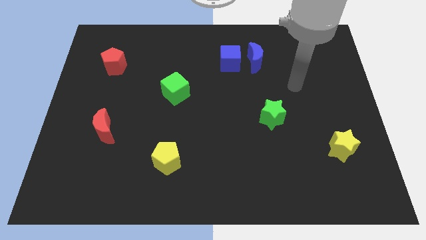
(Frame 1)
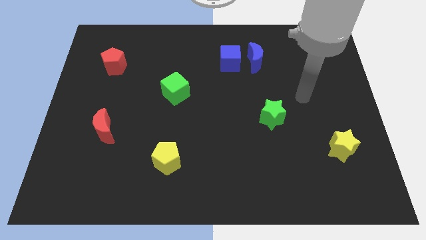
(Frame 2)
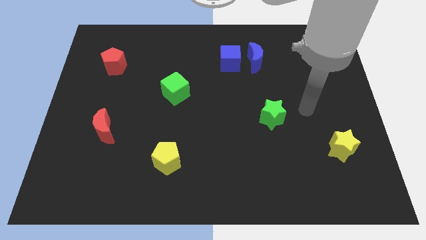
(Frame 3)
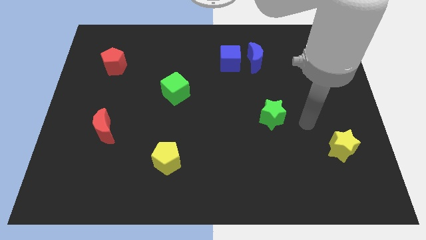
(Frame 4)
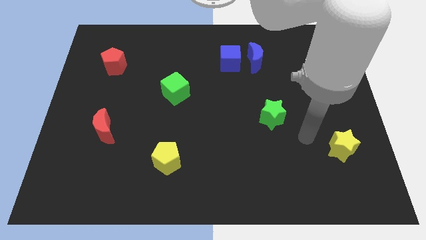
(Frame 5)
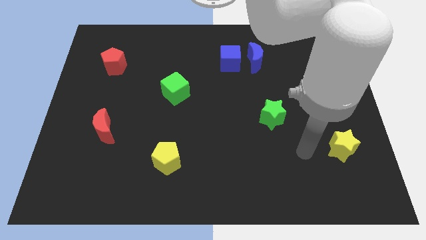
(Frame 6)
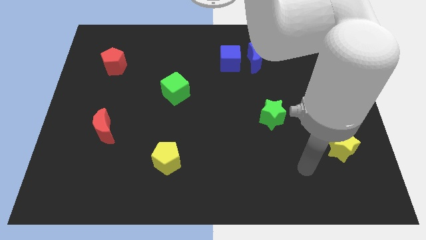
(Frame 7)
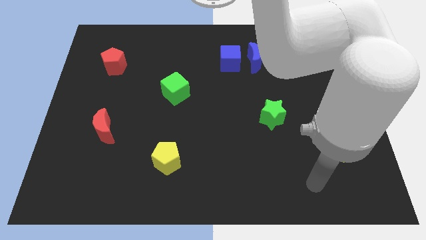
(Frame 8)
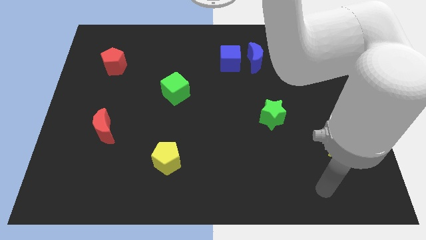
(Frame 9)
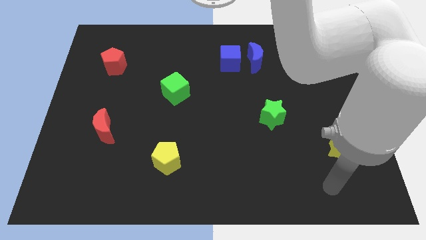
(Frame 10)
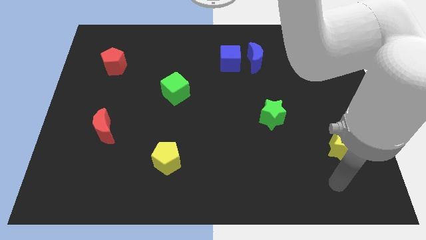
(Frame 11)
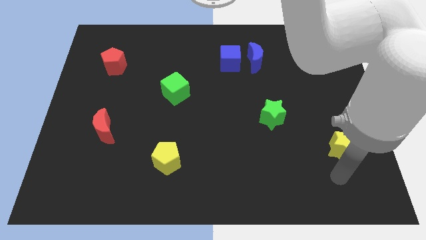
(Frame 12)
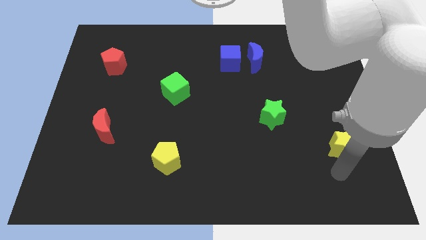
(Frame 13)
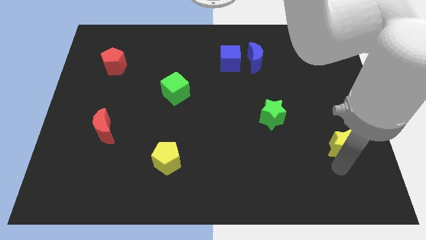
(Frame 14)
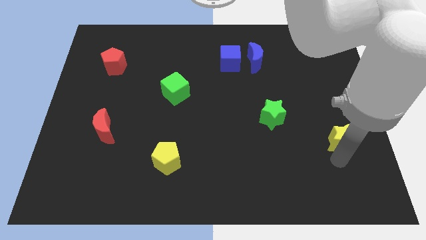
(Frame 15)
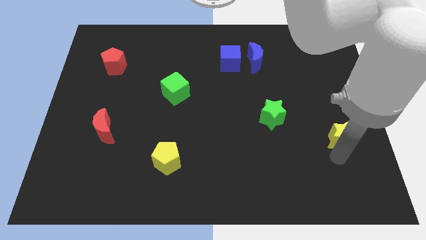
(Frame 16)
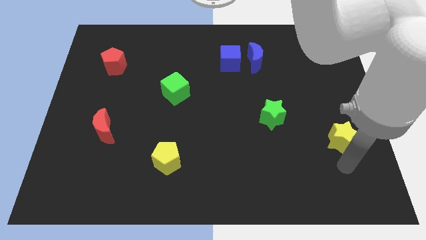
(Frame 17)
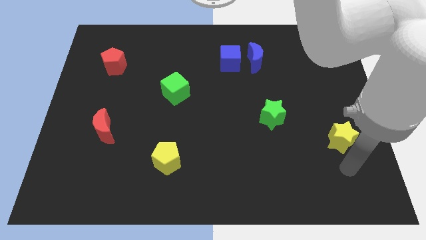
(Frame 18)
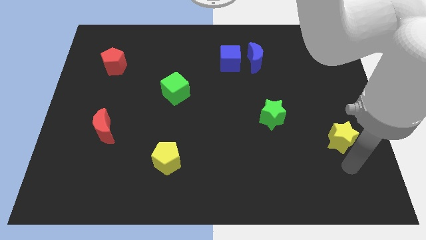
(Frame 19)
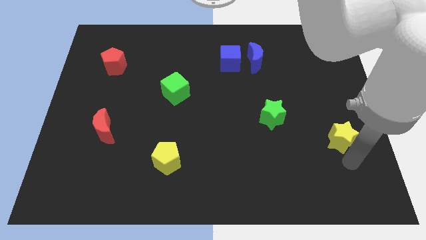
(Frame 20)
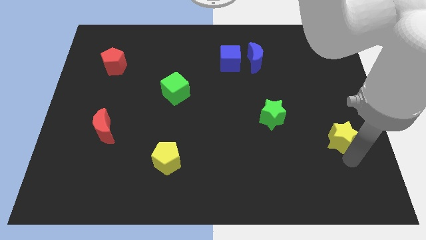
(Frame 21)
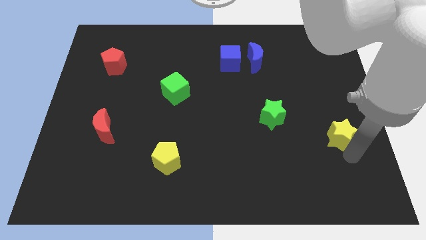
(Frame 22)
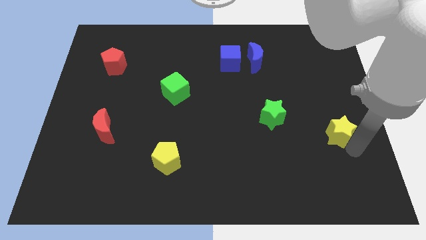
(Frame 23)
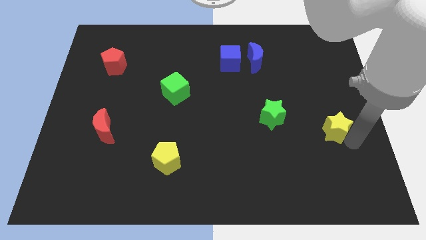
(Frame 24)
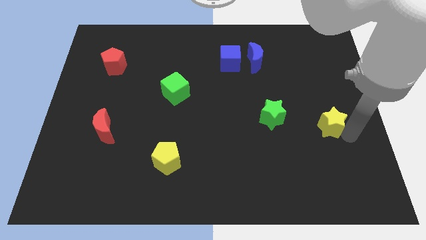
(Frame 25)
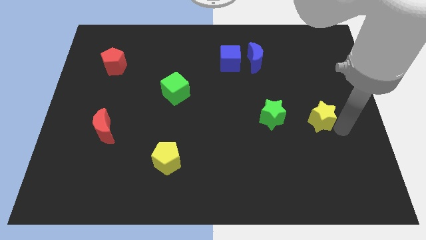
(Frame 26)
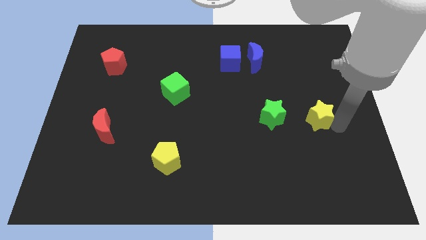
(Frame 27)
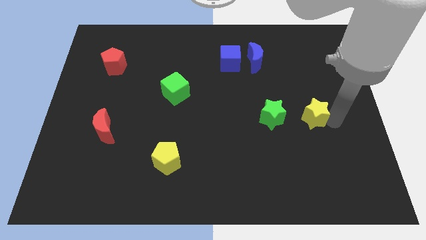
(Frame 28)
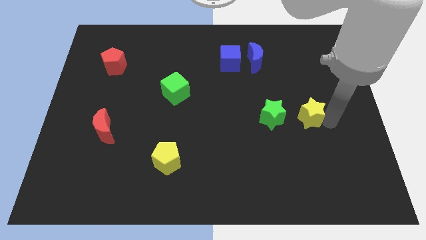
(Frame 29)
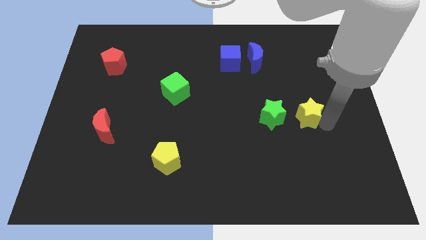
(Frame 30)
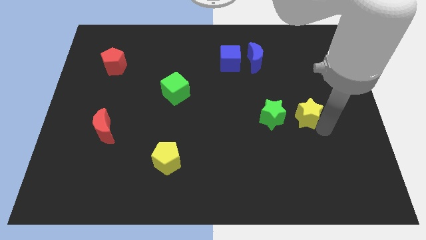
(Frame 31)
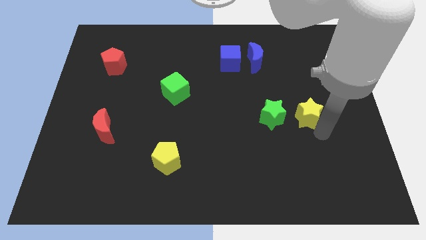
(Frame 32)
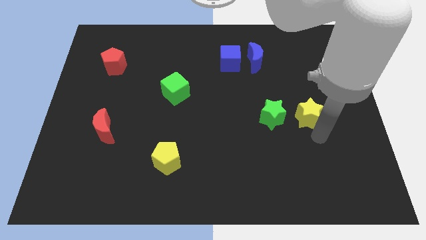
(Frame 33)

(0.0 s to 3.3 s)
place the yellow star to the right of the green star

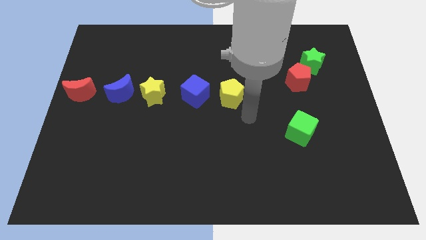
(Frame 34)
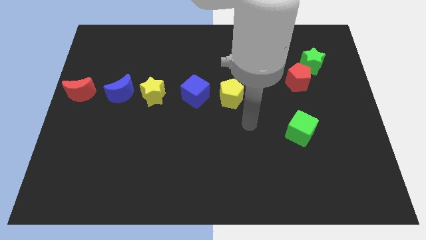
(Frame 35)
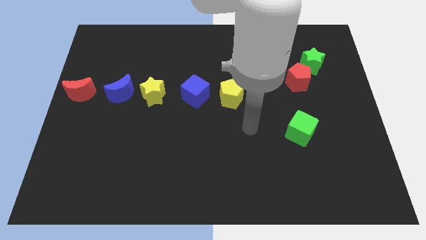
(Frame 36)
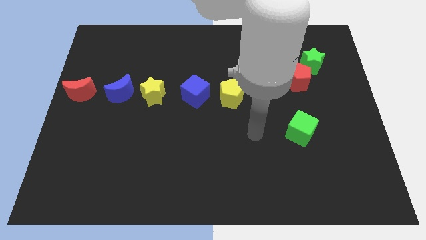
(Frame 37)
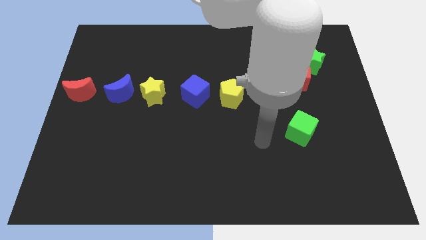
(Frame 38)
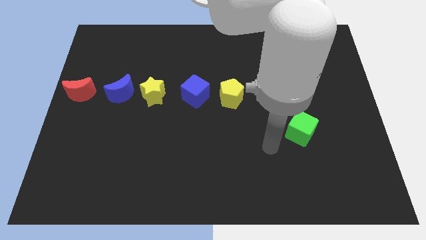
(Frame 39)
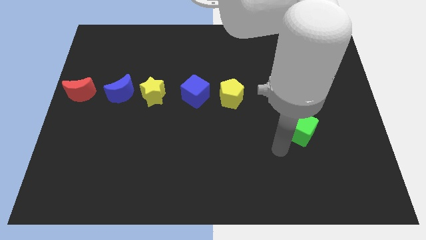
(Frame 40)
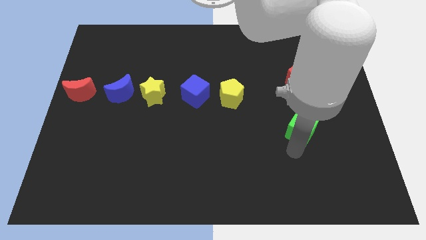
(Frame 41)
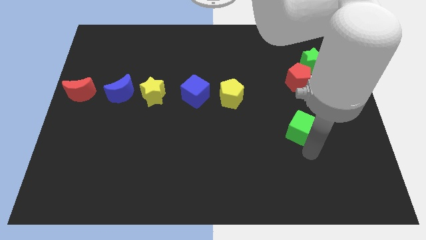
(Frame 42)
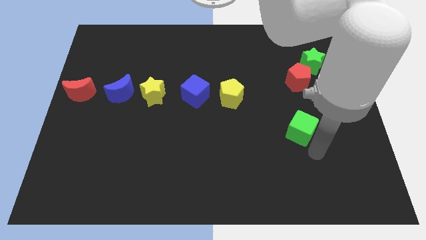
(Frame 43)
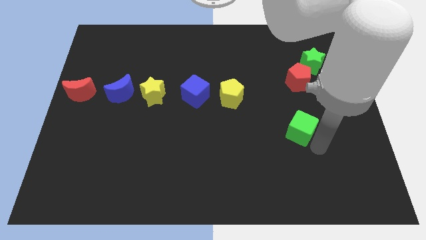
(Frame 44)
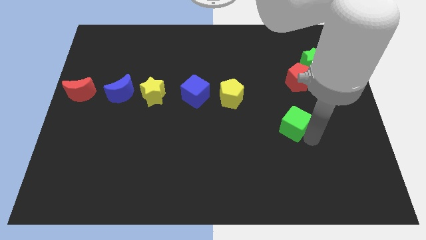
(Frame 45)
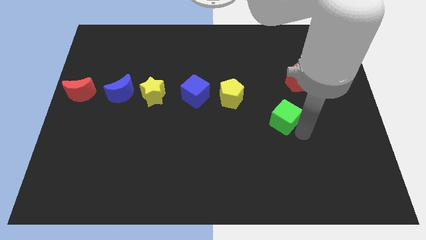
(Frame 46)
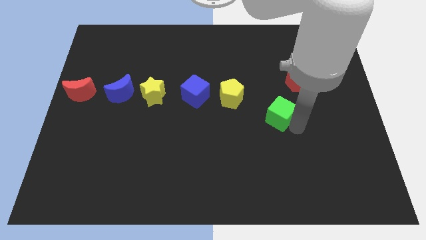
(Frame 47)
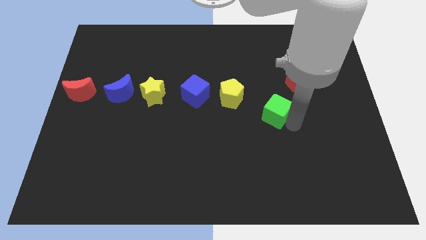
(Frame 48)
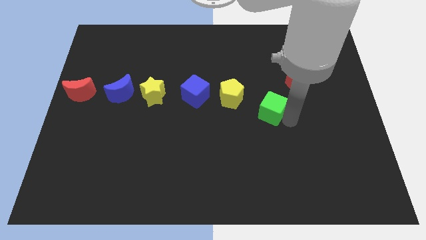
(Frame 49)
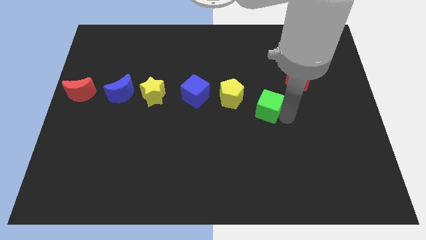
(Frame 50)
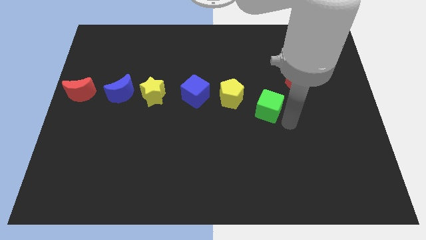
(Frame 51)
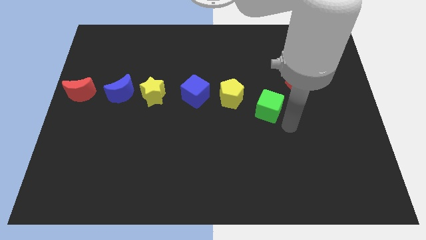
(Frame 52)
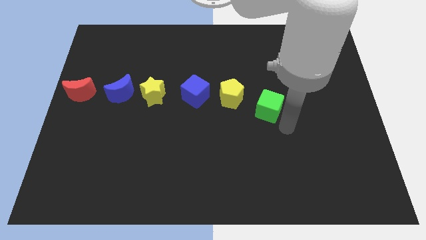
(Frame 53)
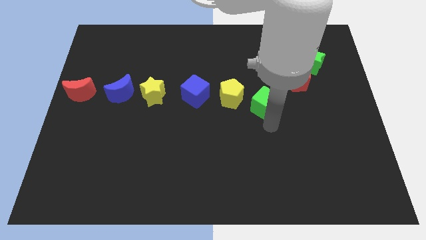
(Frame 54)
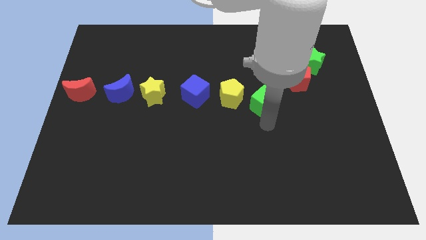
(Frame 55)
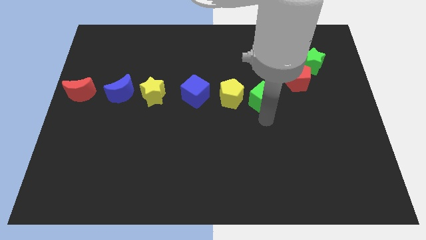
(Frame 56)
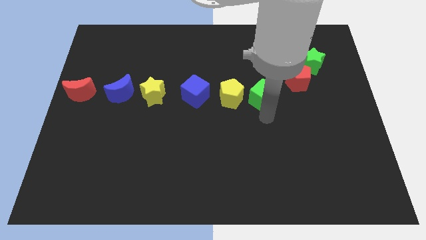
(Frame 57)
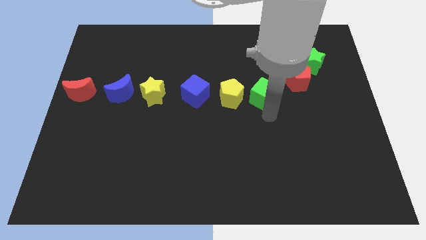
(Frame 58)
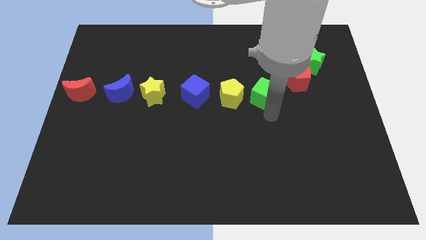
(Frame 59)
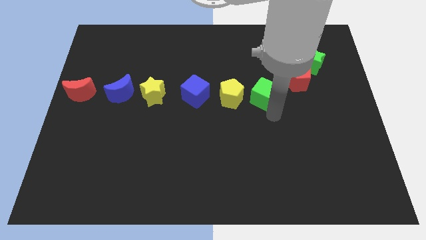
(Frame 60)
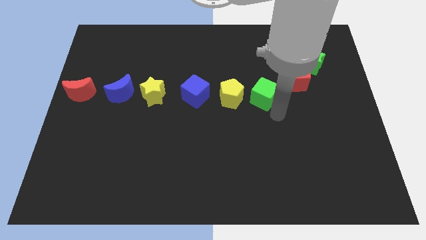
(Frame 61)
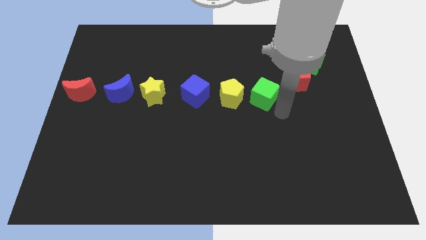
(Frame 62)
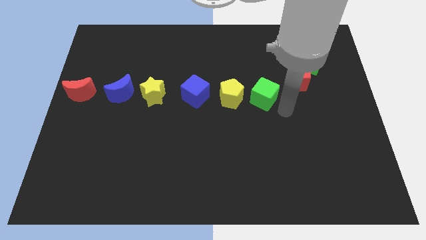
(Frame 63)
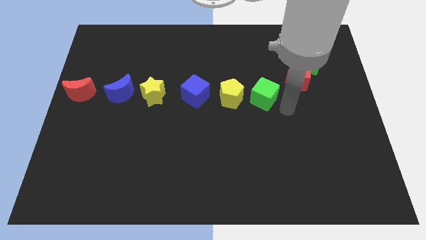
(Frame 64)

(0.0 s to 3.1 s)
place the green cube to the right of the yellow pentagon

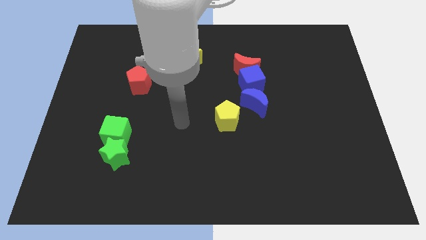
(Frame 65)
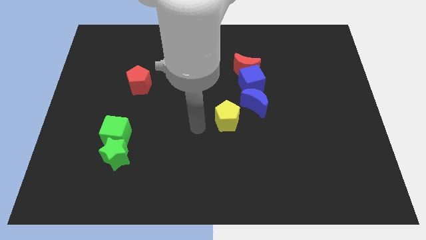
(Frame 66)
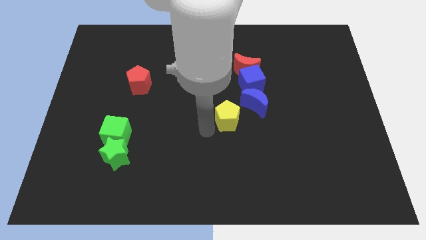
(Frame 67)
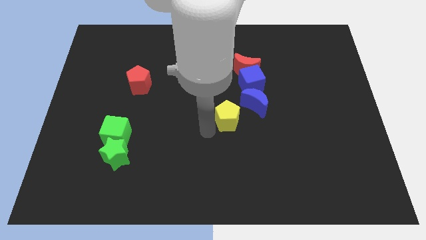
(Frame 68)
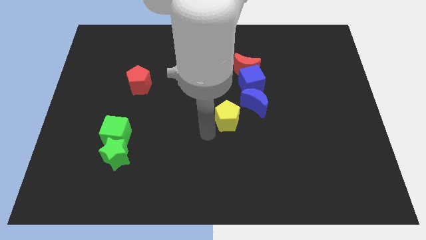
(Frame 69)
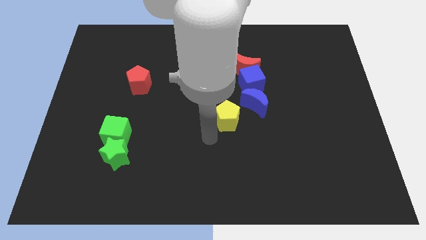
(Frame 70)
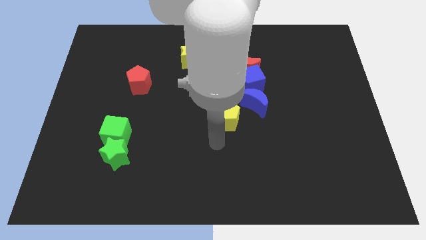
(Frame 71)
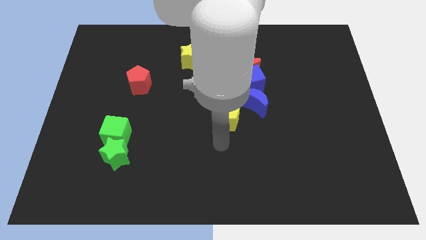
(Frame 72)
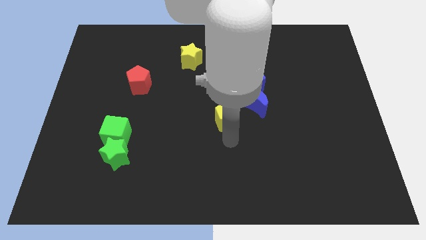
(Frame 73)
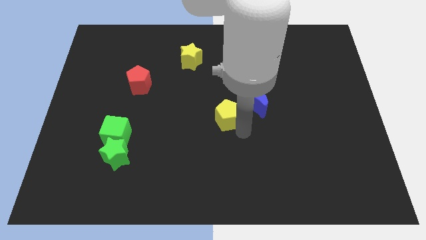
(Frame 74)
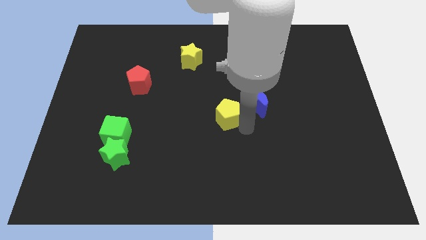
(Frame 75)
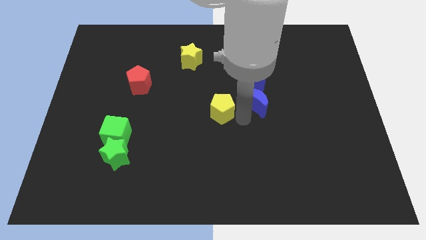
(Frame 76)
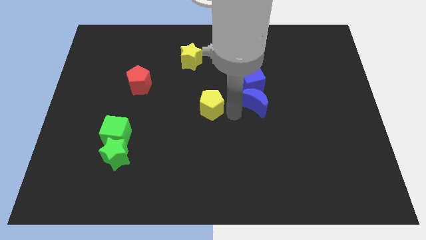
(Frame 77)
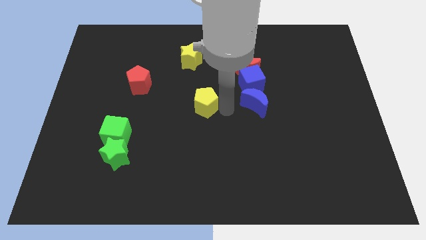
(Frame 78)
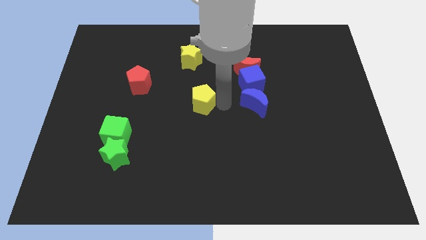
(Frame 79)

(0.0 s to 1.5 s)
place the yellow pentagon at the left side of the blue moon

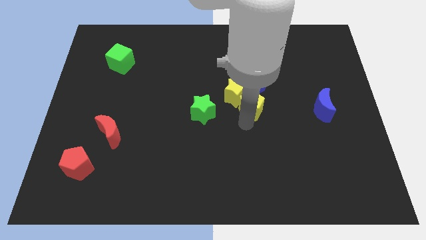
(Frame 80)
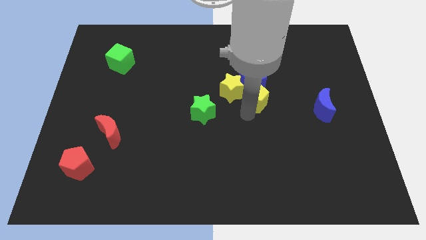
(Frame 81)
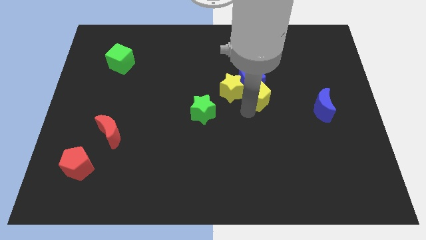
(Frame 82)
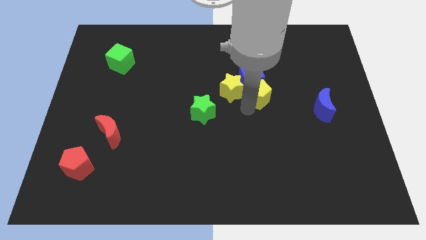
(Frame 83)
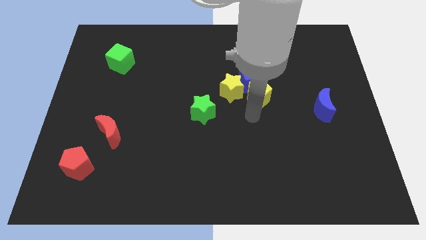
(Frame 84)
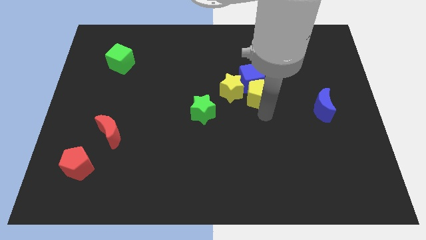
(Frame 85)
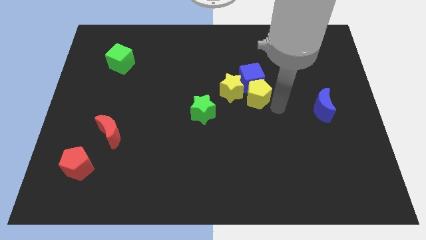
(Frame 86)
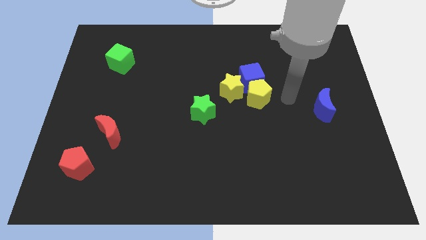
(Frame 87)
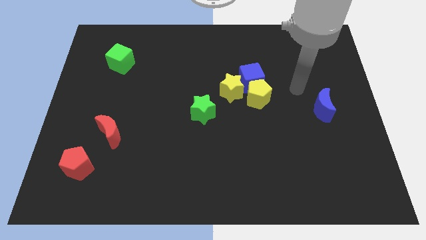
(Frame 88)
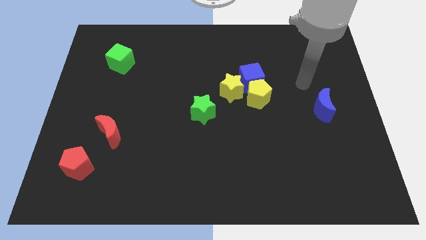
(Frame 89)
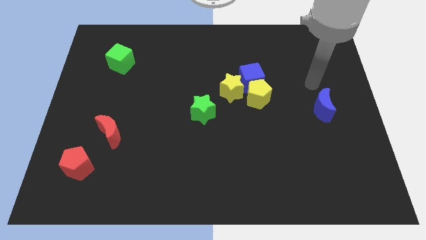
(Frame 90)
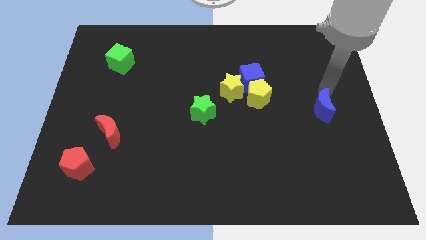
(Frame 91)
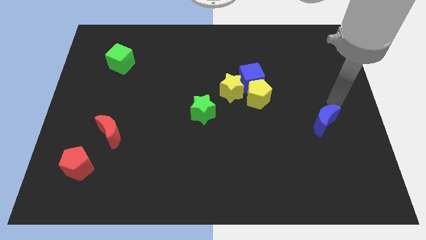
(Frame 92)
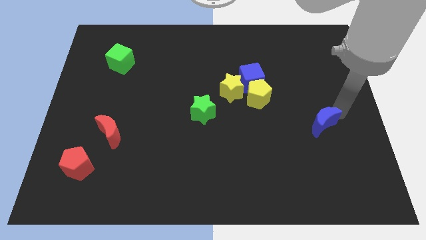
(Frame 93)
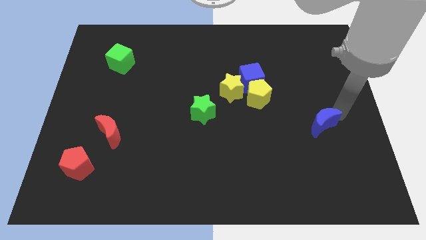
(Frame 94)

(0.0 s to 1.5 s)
move your arm away from the yellow pentagon
